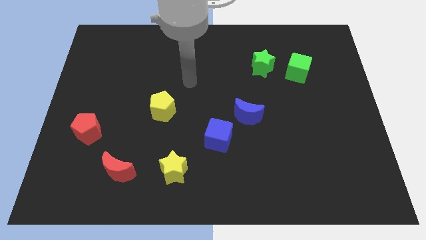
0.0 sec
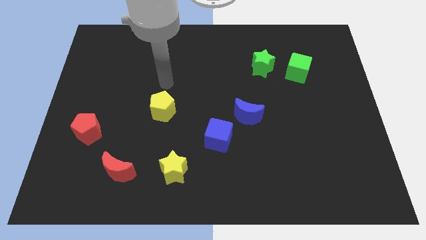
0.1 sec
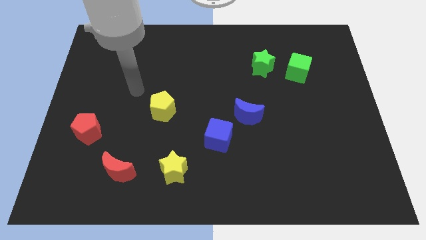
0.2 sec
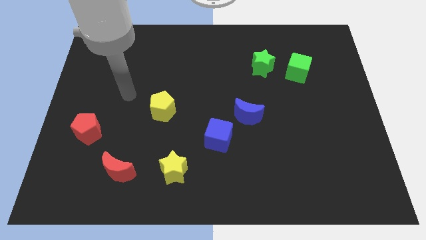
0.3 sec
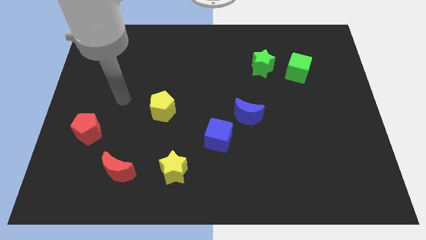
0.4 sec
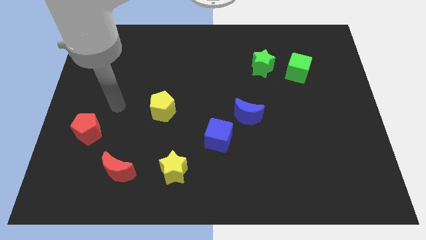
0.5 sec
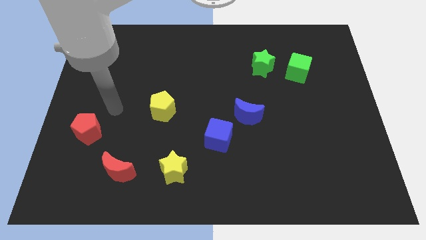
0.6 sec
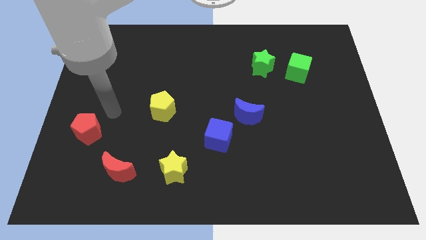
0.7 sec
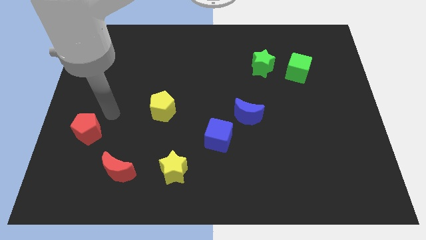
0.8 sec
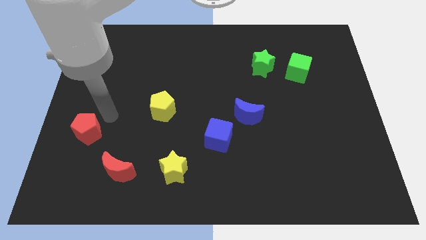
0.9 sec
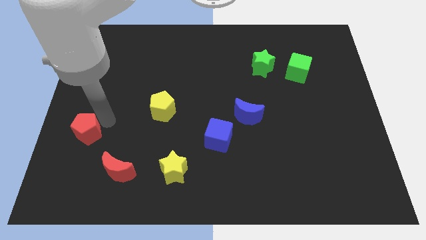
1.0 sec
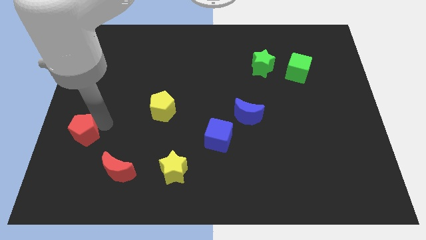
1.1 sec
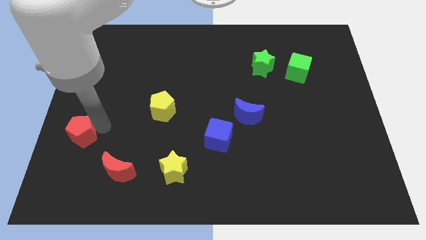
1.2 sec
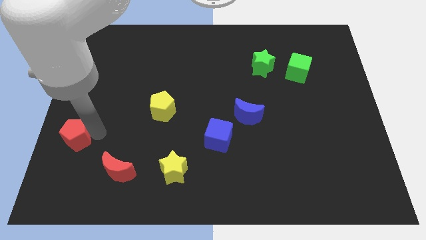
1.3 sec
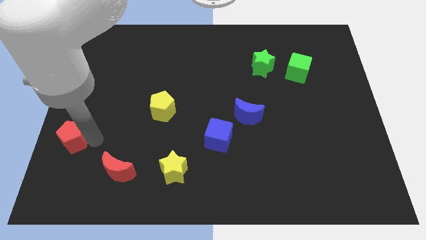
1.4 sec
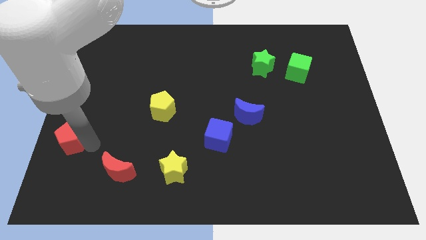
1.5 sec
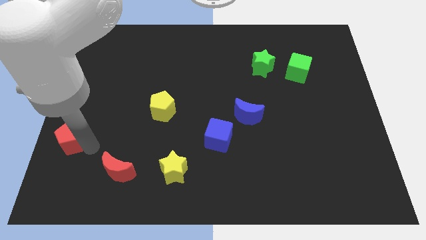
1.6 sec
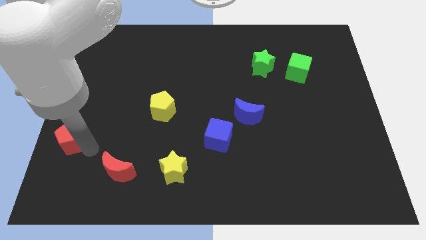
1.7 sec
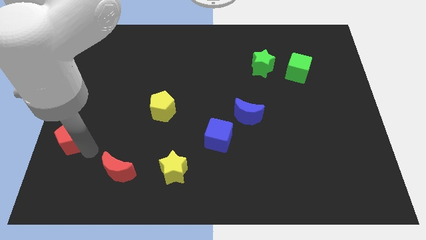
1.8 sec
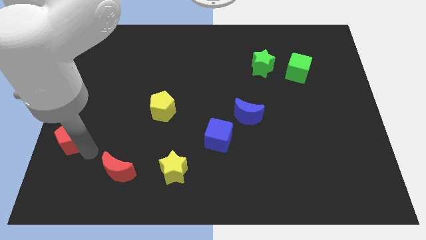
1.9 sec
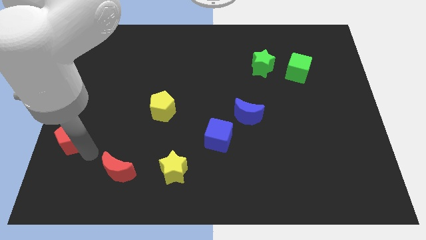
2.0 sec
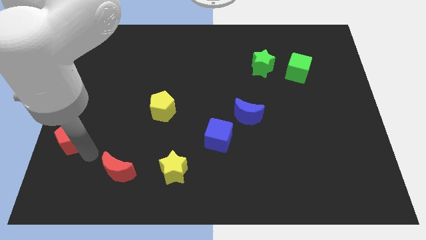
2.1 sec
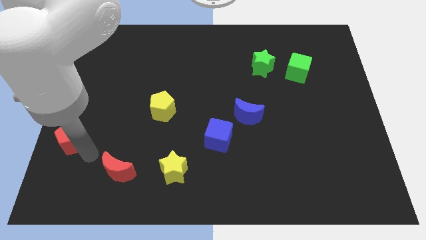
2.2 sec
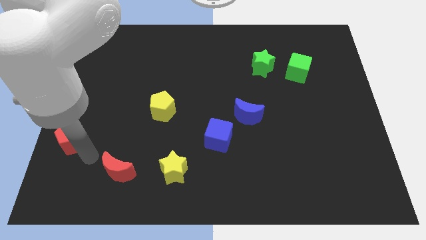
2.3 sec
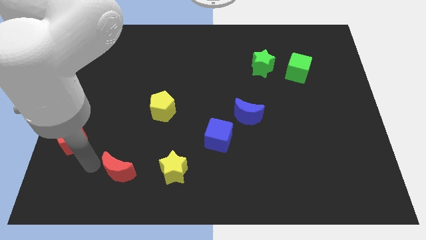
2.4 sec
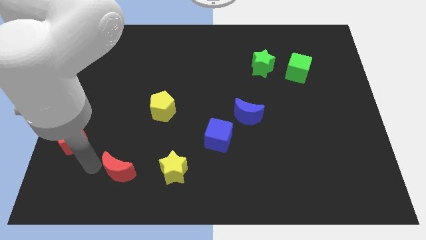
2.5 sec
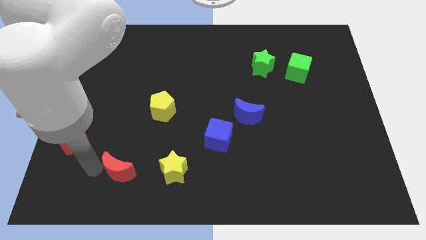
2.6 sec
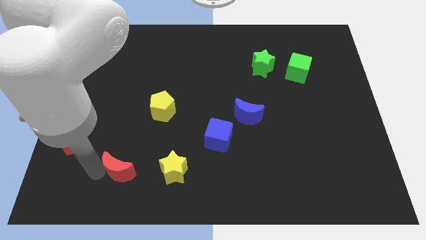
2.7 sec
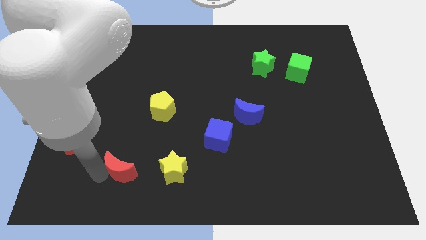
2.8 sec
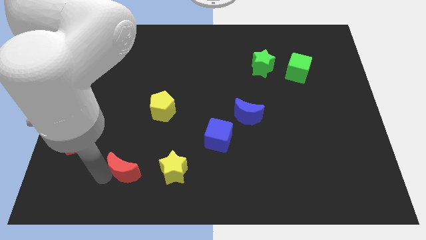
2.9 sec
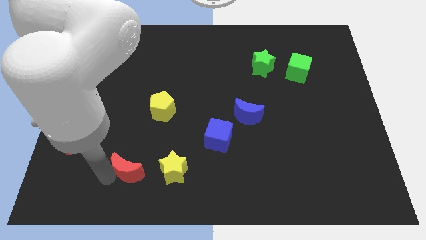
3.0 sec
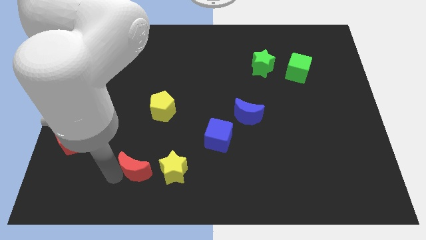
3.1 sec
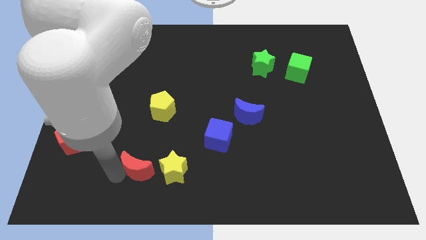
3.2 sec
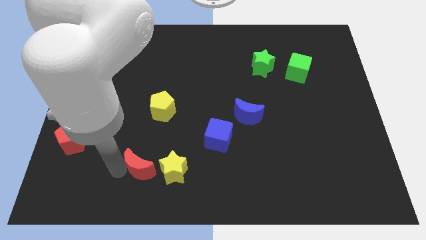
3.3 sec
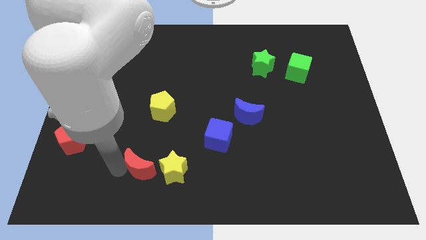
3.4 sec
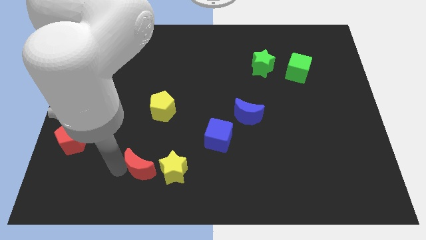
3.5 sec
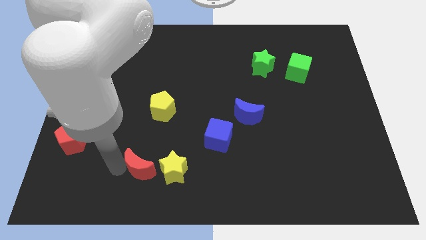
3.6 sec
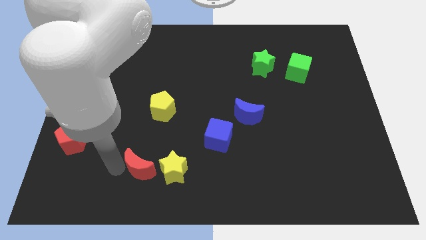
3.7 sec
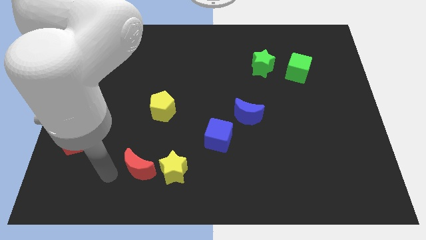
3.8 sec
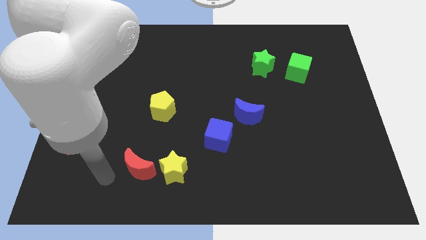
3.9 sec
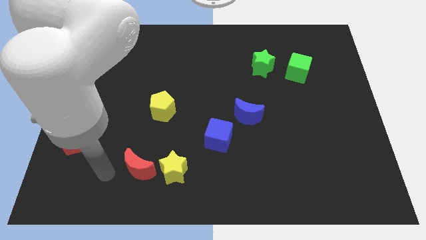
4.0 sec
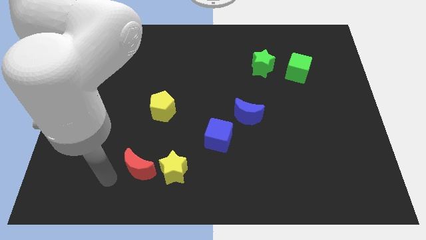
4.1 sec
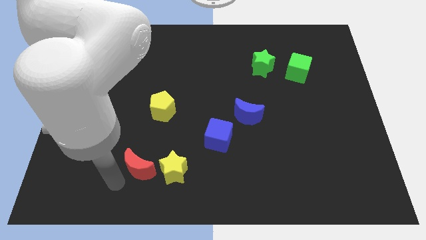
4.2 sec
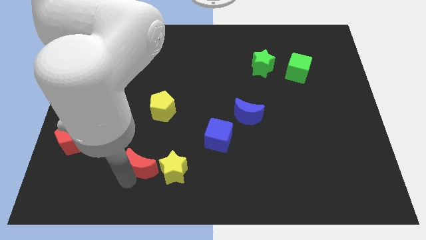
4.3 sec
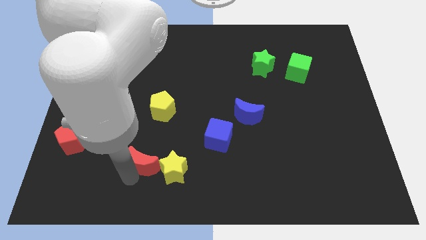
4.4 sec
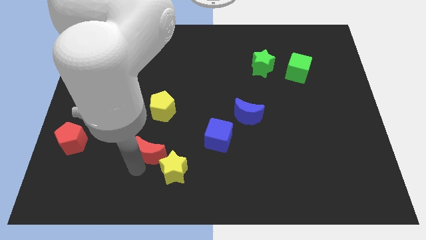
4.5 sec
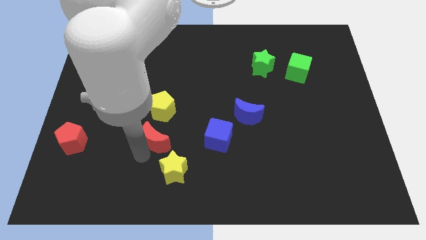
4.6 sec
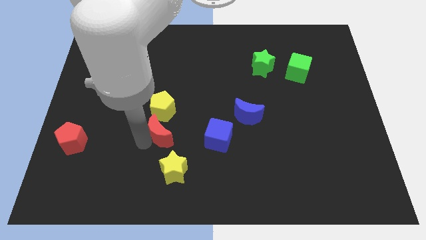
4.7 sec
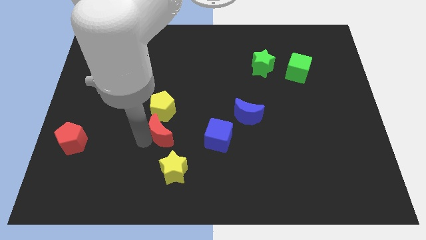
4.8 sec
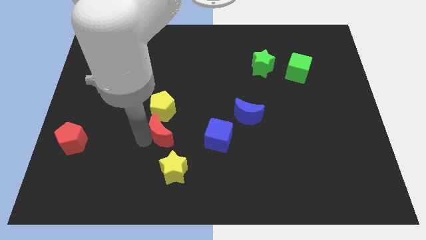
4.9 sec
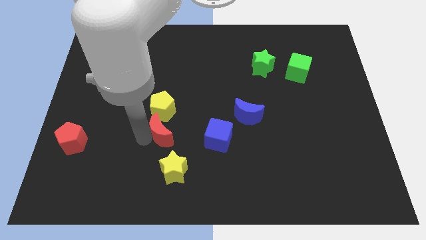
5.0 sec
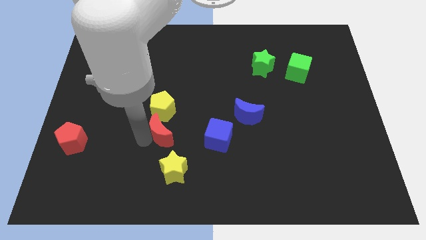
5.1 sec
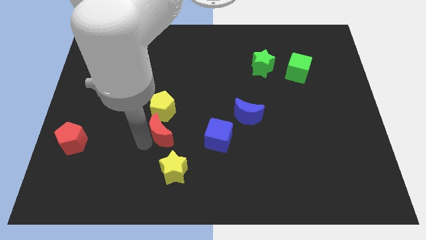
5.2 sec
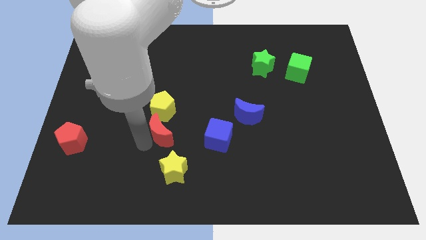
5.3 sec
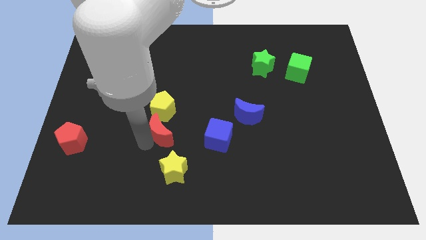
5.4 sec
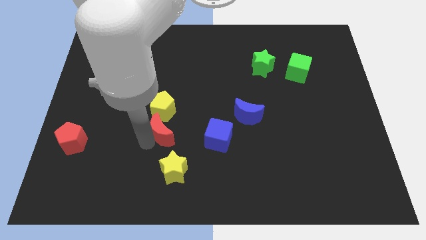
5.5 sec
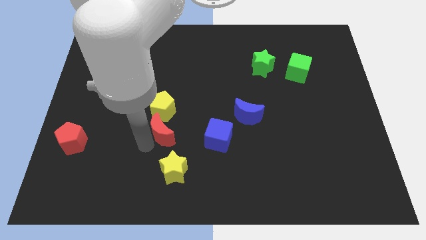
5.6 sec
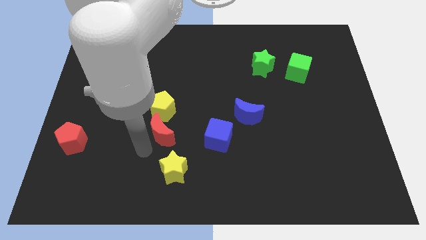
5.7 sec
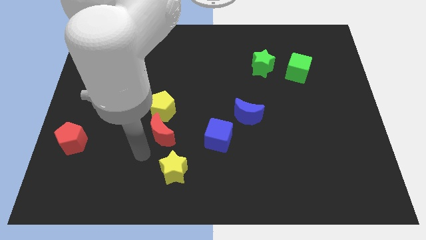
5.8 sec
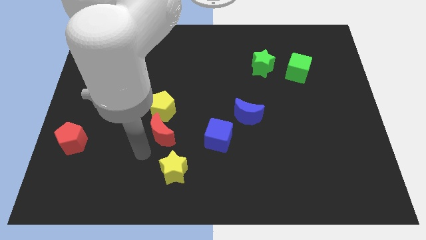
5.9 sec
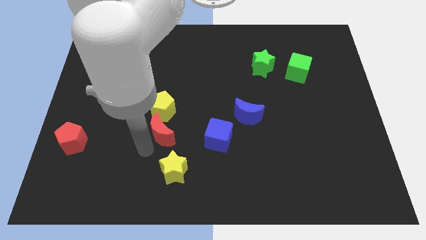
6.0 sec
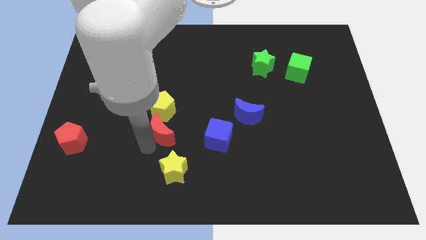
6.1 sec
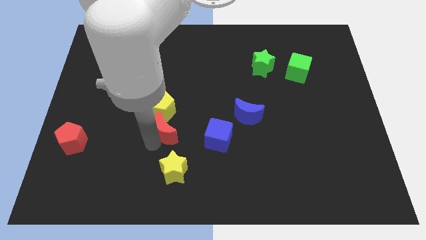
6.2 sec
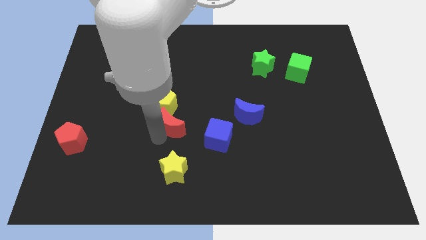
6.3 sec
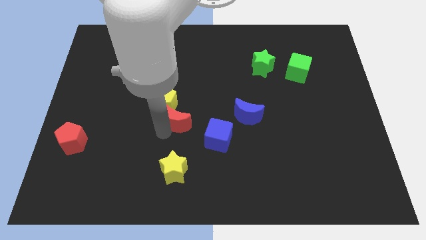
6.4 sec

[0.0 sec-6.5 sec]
move the red moon towards the yellow pentagon

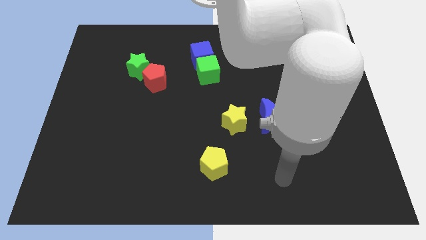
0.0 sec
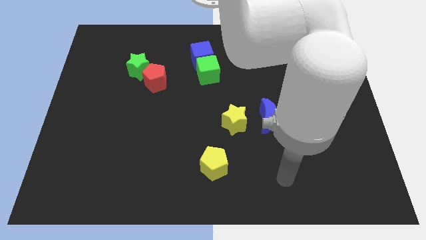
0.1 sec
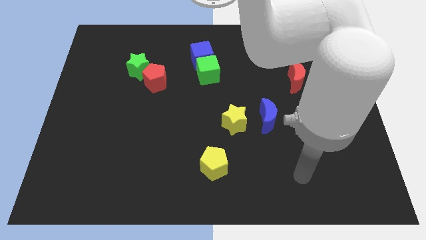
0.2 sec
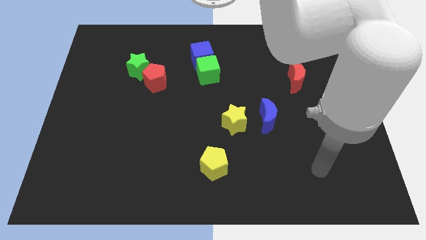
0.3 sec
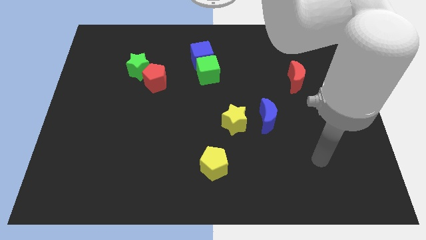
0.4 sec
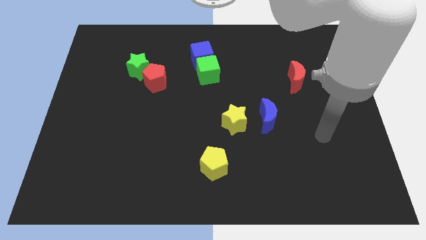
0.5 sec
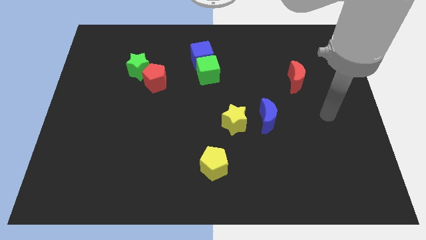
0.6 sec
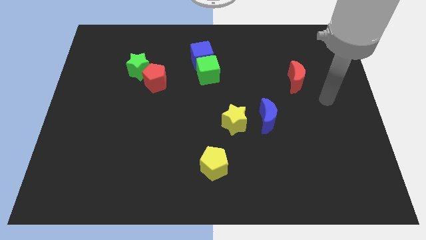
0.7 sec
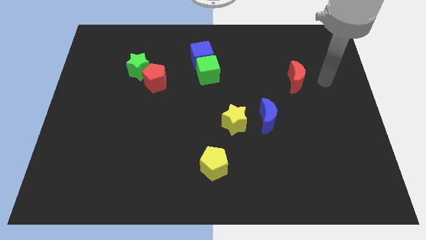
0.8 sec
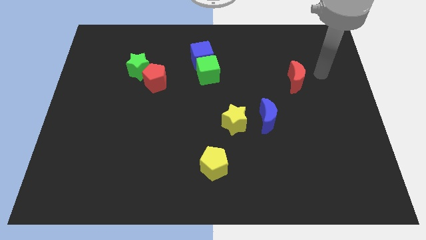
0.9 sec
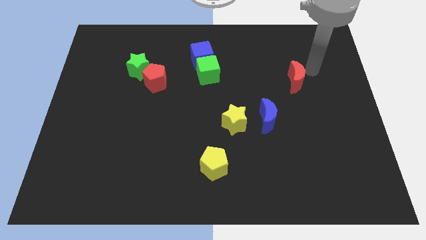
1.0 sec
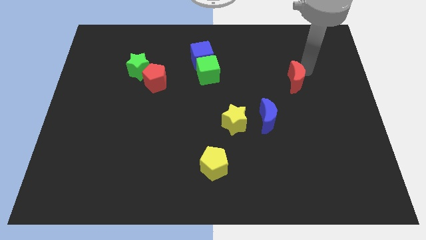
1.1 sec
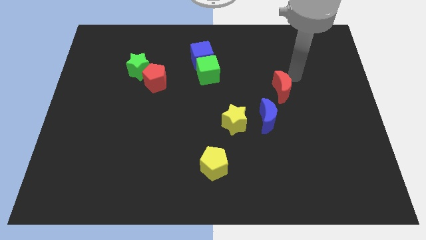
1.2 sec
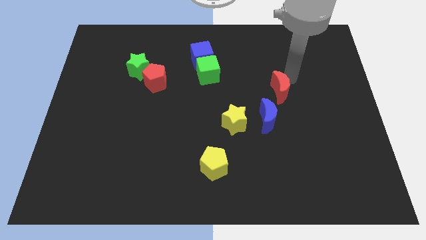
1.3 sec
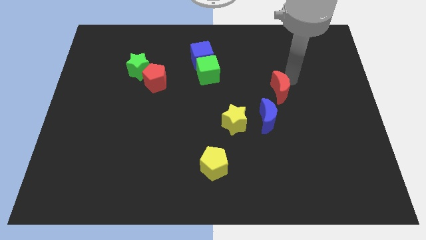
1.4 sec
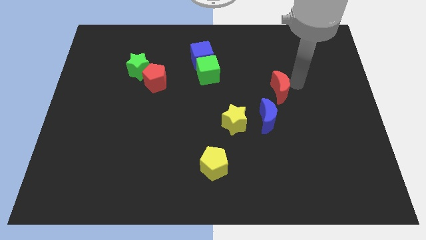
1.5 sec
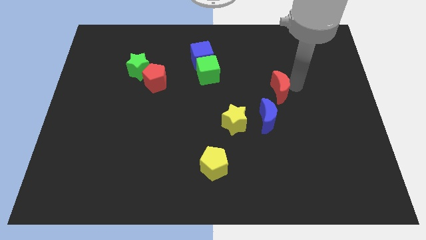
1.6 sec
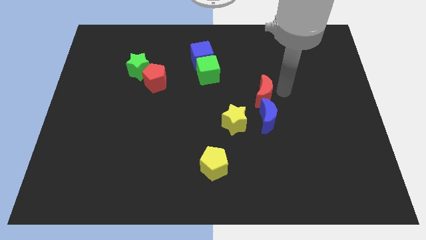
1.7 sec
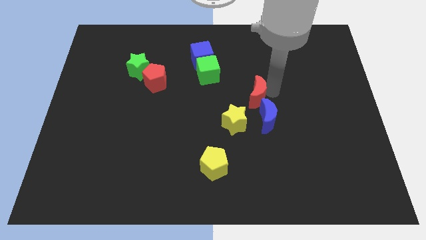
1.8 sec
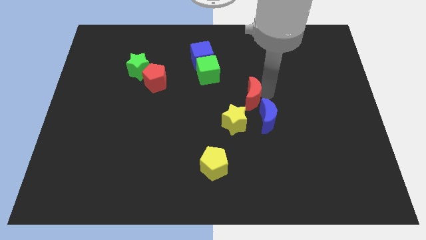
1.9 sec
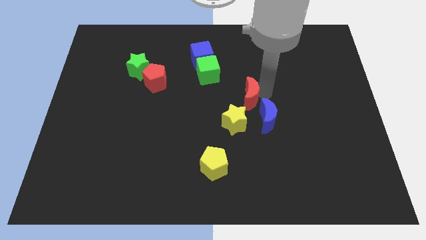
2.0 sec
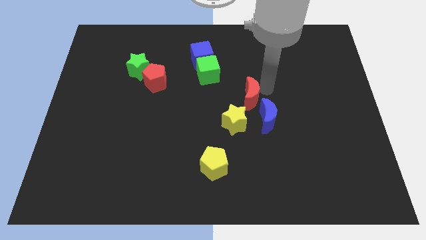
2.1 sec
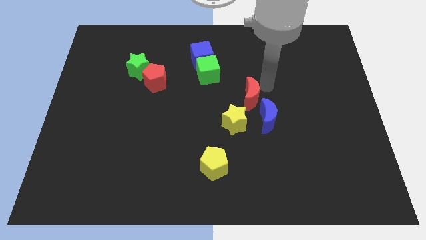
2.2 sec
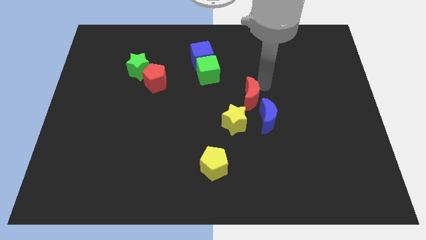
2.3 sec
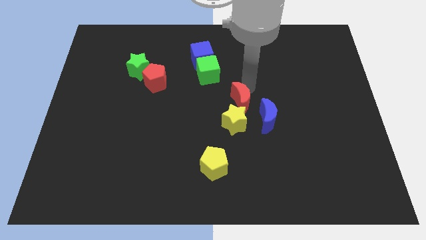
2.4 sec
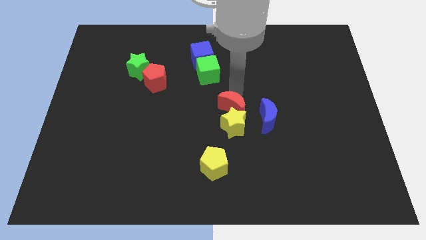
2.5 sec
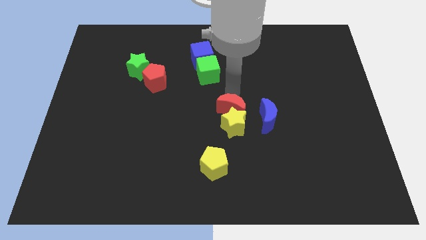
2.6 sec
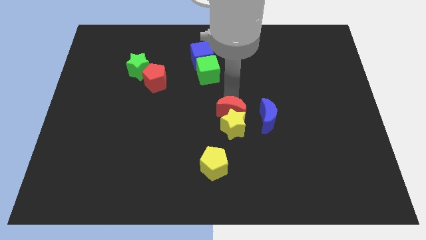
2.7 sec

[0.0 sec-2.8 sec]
move the red moon close to the yellow star
